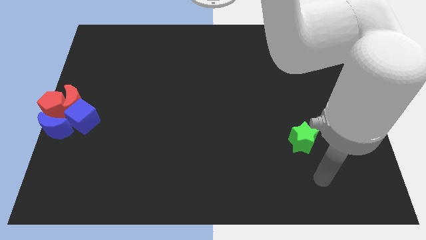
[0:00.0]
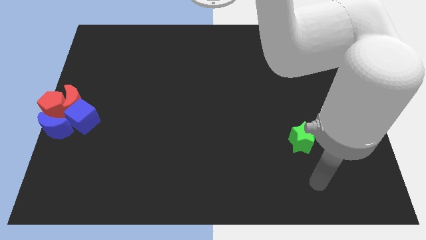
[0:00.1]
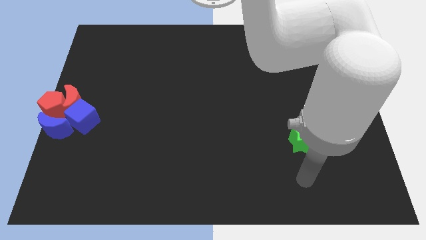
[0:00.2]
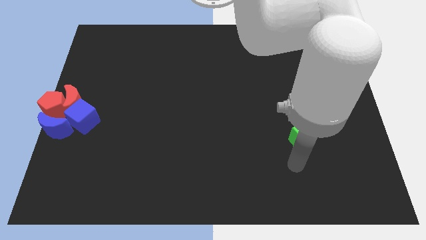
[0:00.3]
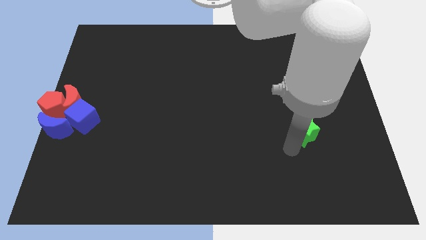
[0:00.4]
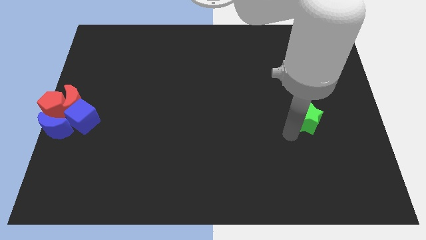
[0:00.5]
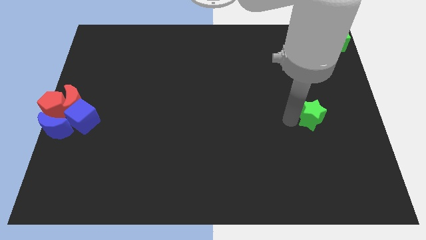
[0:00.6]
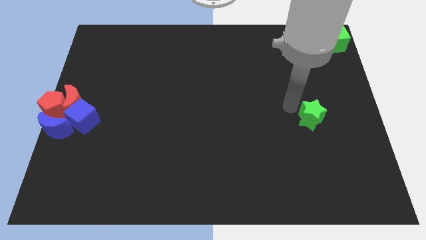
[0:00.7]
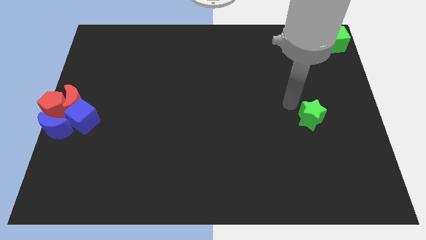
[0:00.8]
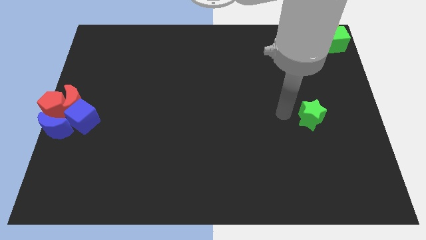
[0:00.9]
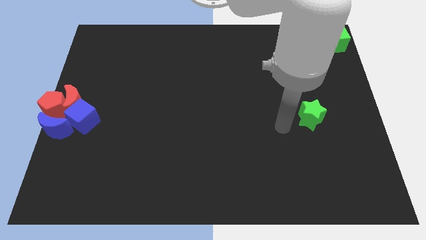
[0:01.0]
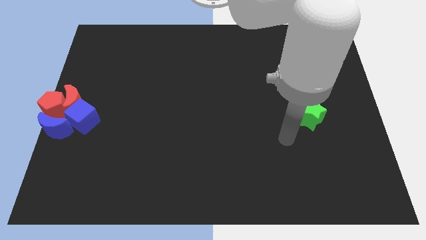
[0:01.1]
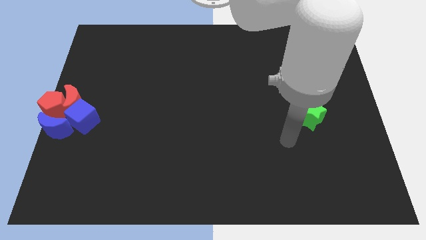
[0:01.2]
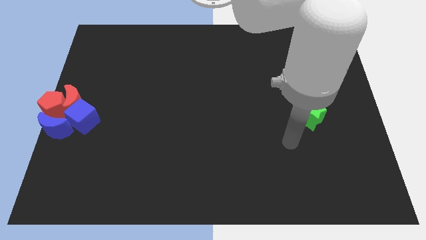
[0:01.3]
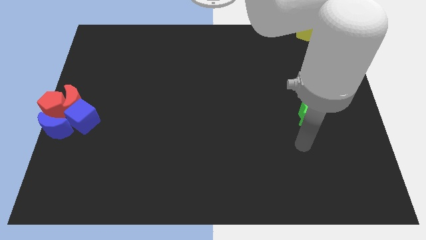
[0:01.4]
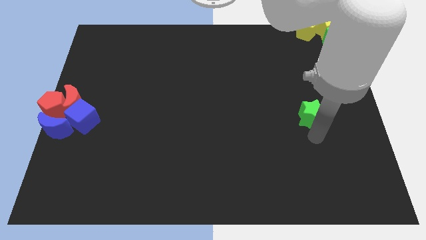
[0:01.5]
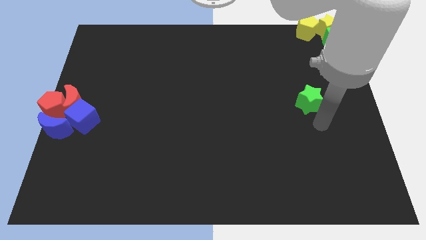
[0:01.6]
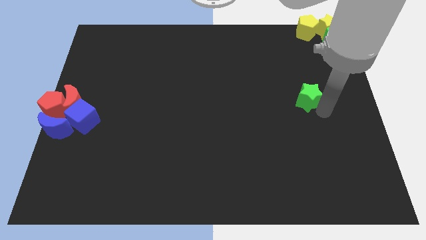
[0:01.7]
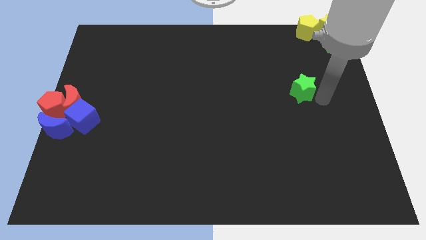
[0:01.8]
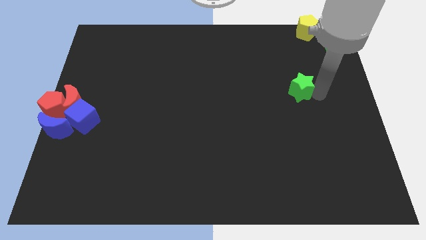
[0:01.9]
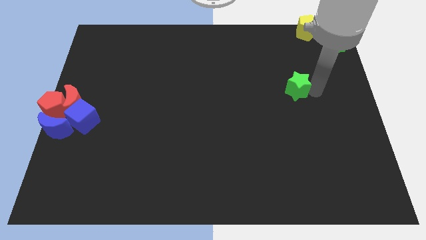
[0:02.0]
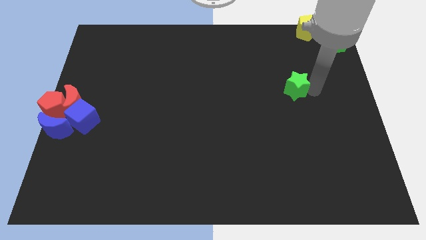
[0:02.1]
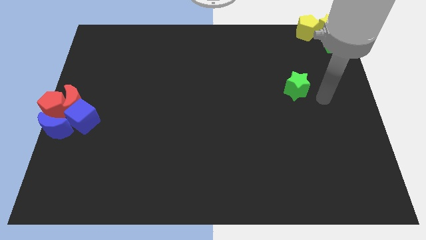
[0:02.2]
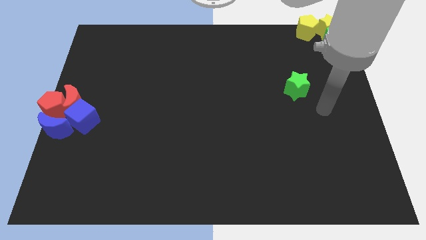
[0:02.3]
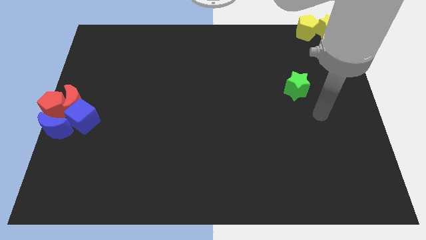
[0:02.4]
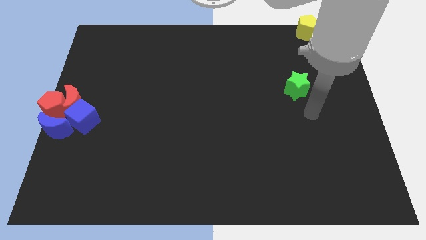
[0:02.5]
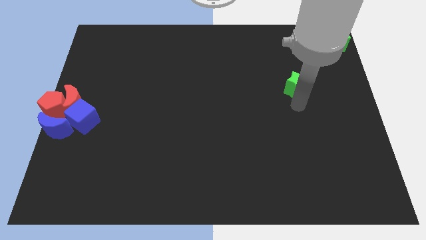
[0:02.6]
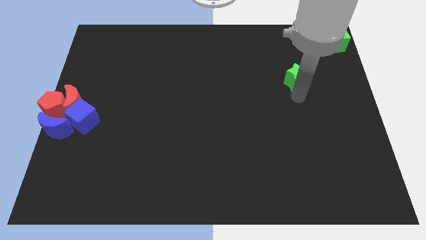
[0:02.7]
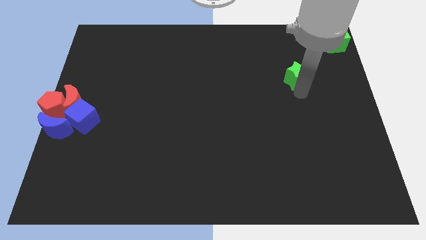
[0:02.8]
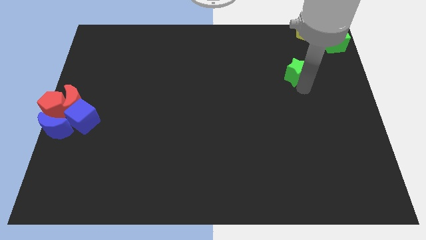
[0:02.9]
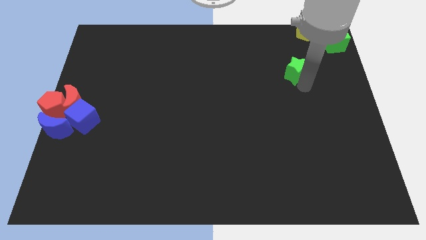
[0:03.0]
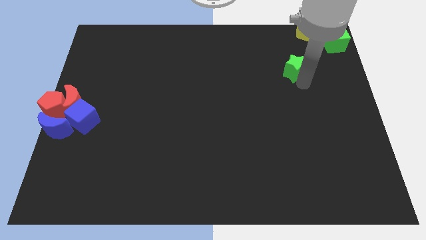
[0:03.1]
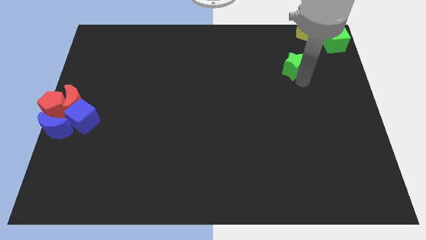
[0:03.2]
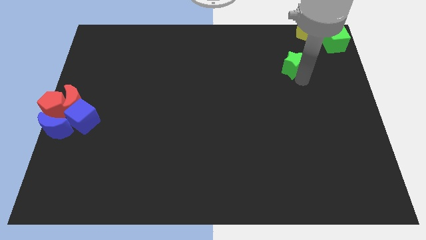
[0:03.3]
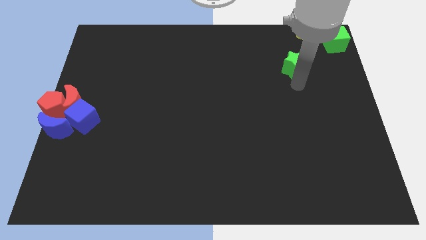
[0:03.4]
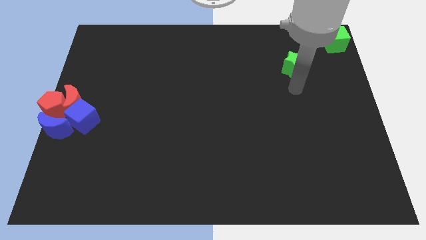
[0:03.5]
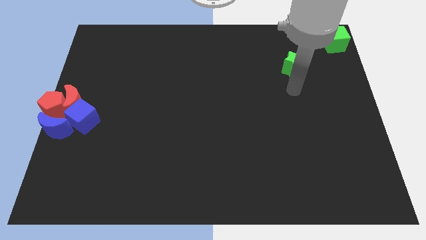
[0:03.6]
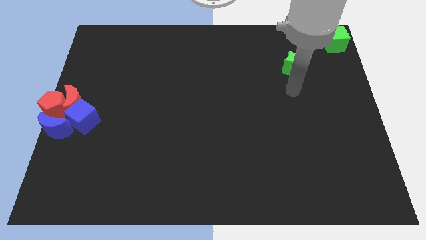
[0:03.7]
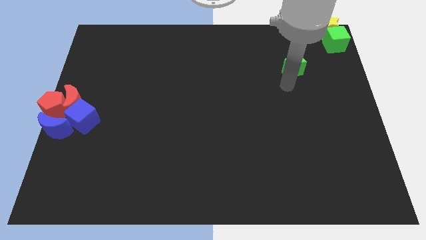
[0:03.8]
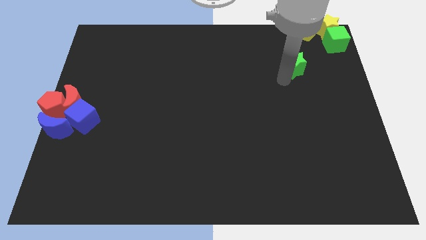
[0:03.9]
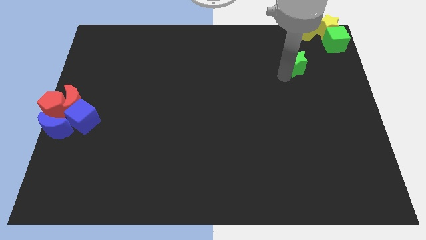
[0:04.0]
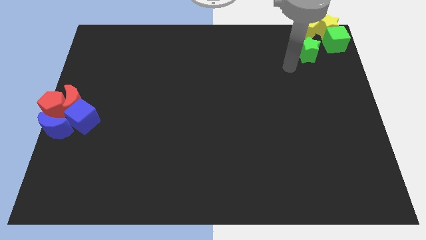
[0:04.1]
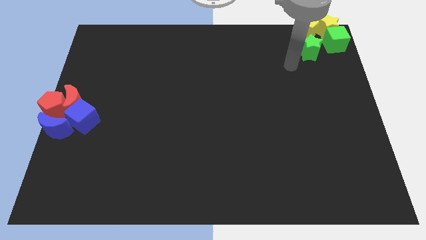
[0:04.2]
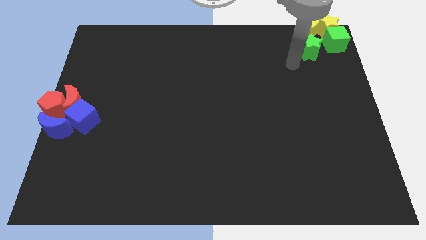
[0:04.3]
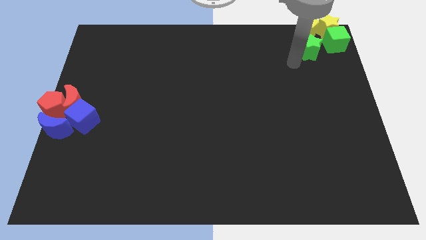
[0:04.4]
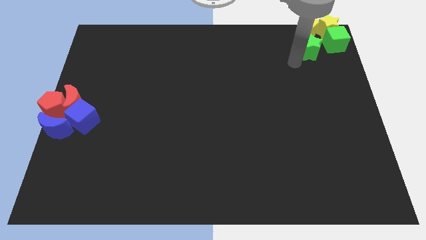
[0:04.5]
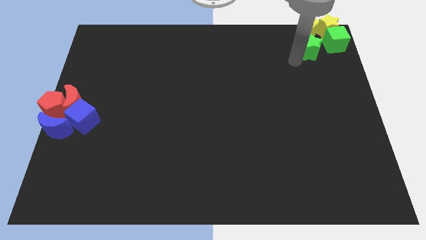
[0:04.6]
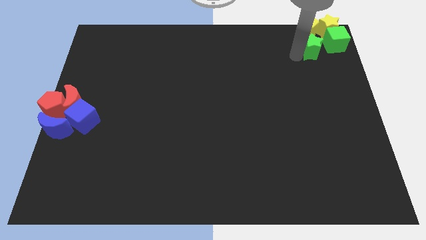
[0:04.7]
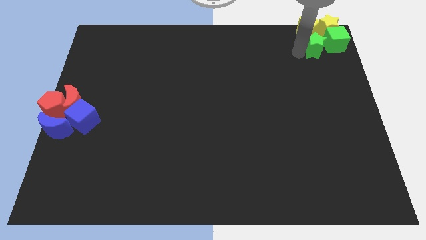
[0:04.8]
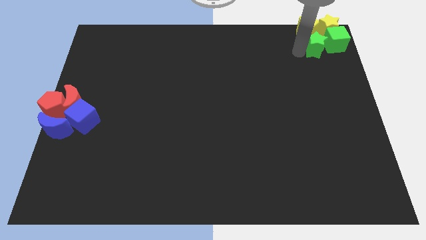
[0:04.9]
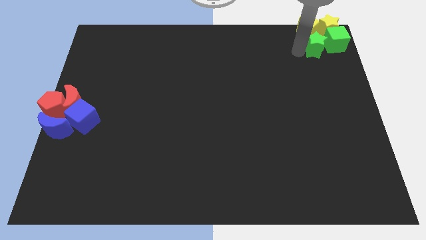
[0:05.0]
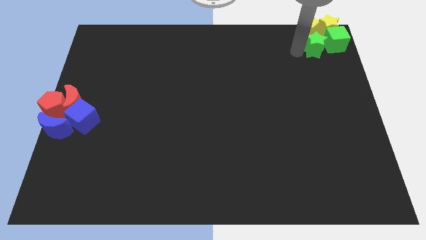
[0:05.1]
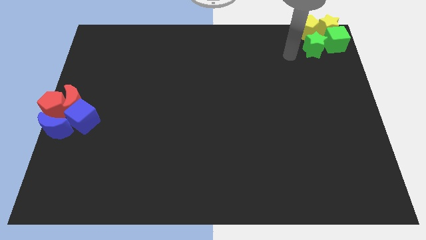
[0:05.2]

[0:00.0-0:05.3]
push the green star to the left of the green cube

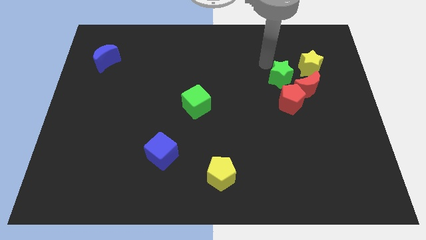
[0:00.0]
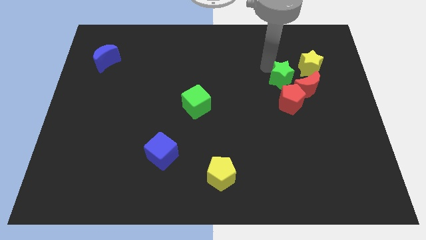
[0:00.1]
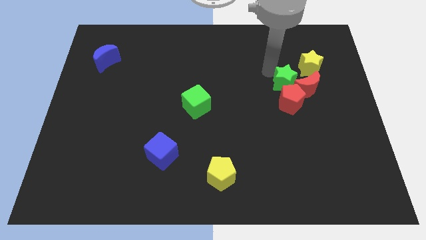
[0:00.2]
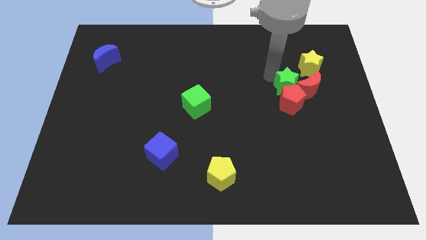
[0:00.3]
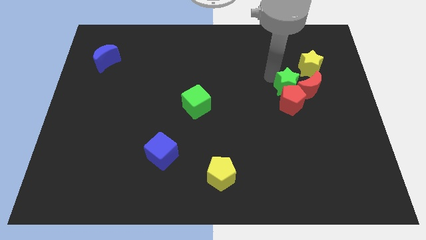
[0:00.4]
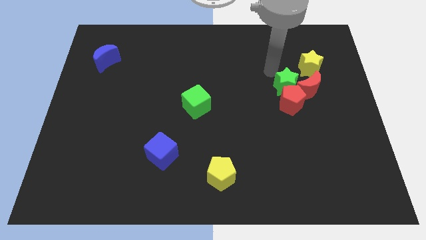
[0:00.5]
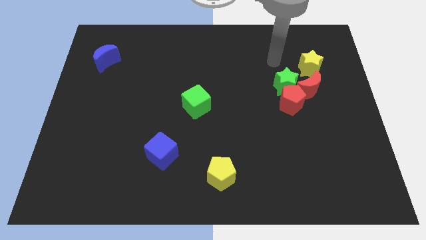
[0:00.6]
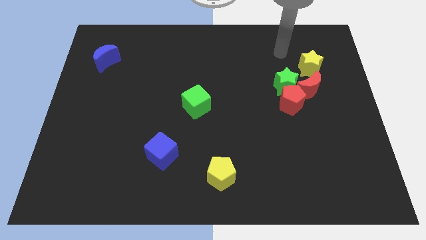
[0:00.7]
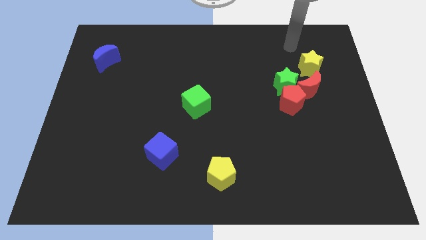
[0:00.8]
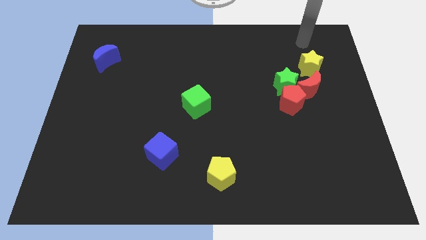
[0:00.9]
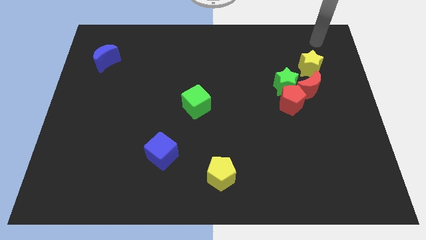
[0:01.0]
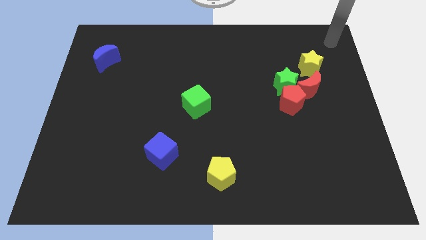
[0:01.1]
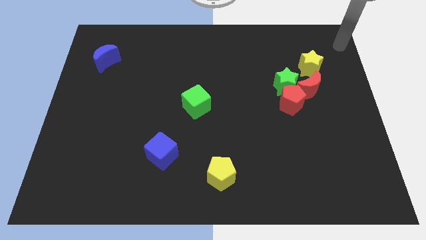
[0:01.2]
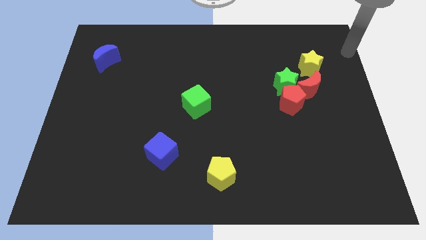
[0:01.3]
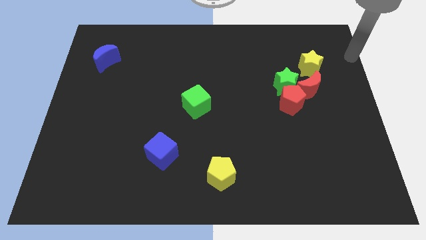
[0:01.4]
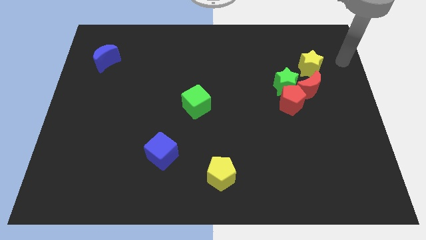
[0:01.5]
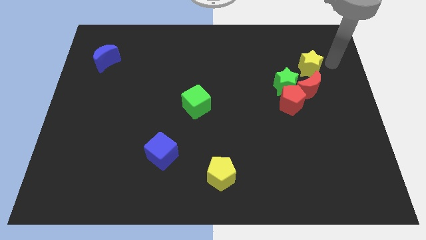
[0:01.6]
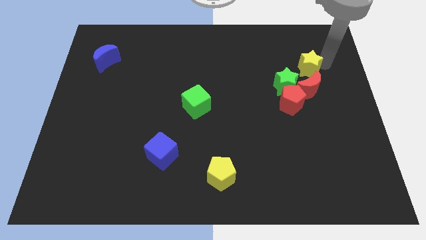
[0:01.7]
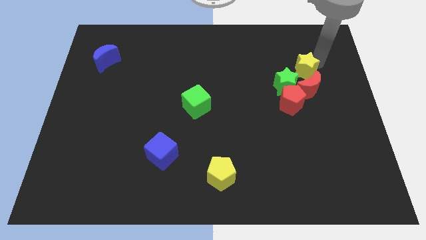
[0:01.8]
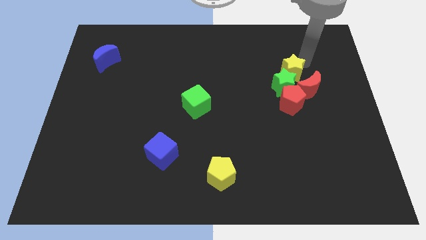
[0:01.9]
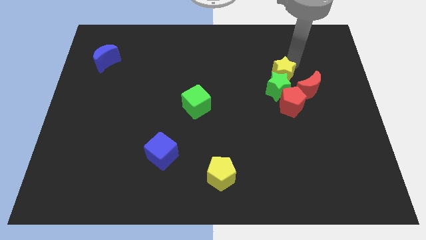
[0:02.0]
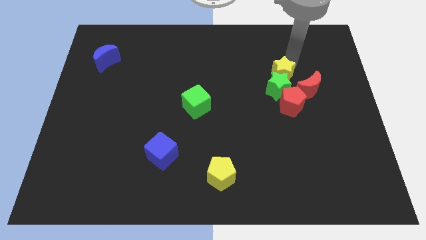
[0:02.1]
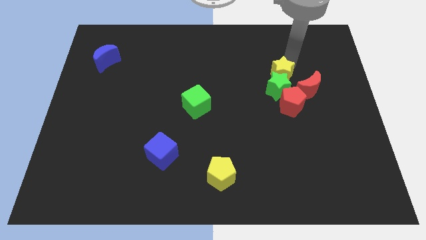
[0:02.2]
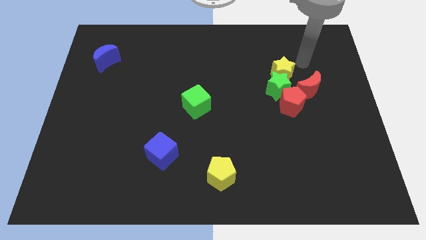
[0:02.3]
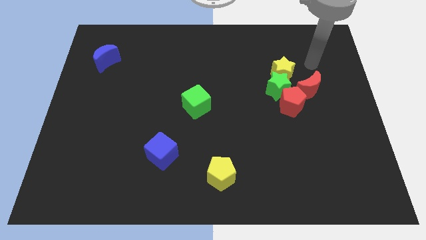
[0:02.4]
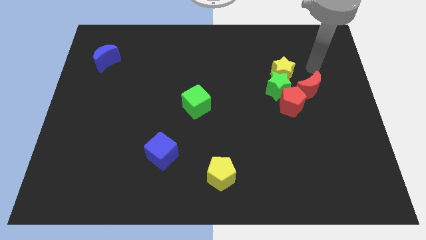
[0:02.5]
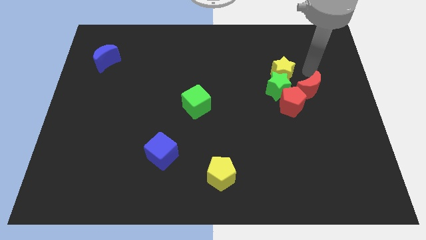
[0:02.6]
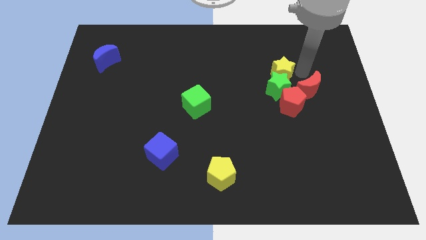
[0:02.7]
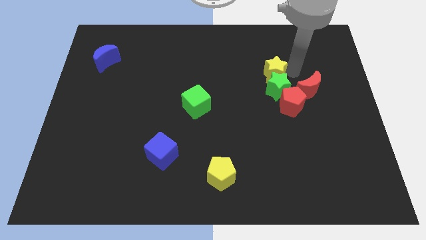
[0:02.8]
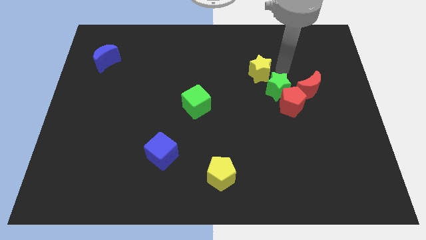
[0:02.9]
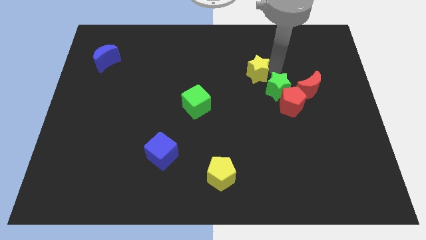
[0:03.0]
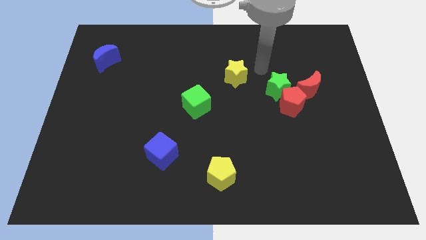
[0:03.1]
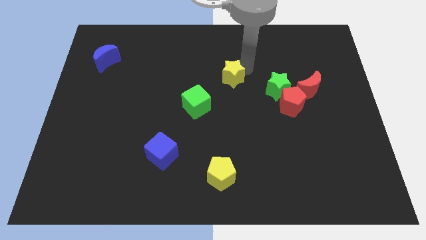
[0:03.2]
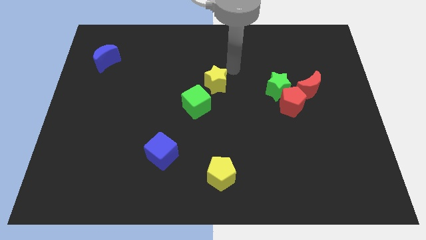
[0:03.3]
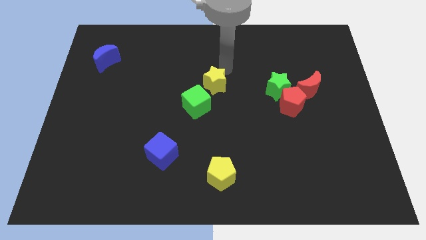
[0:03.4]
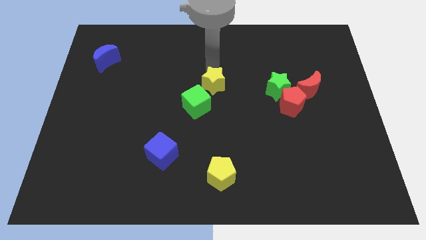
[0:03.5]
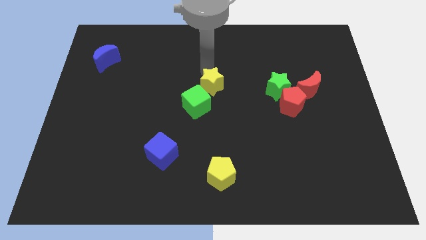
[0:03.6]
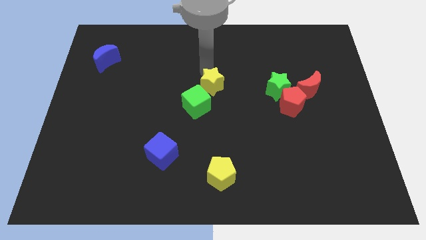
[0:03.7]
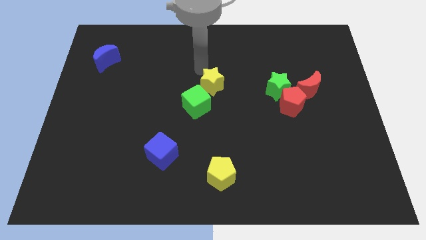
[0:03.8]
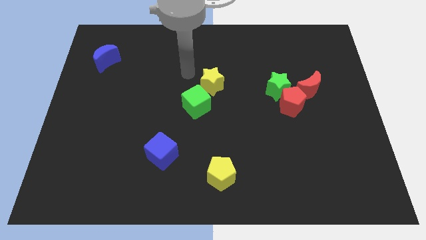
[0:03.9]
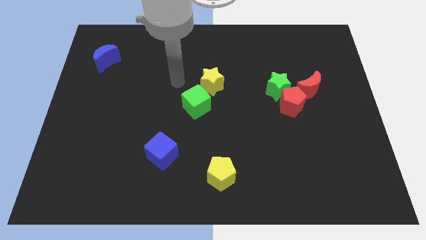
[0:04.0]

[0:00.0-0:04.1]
place the yellow star vertical to the green star
